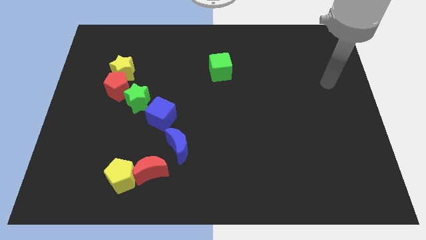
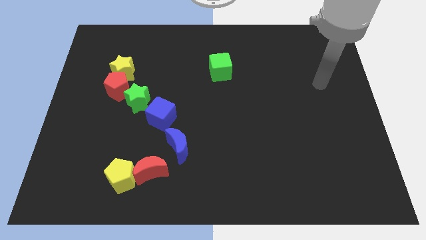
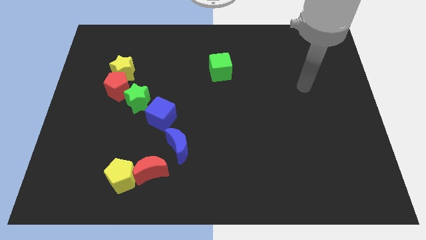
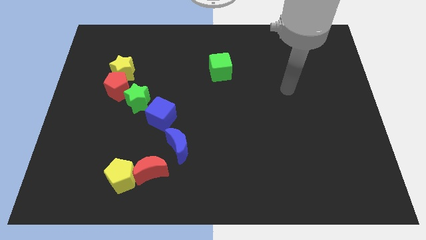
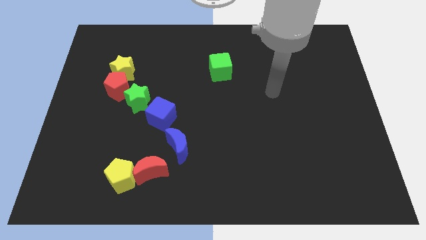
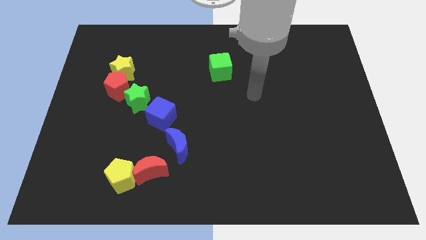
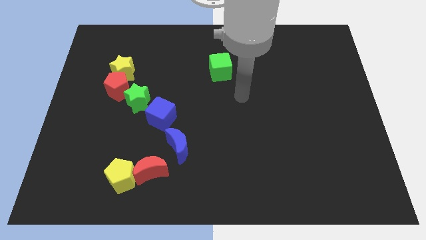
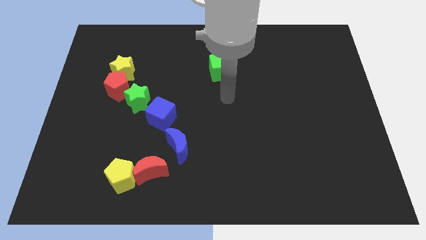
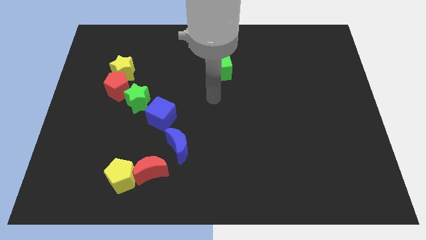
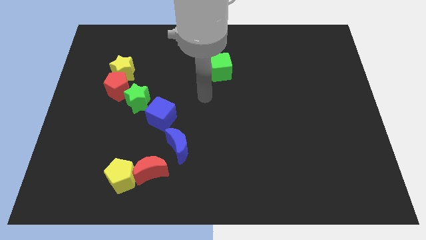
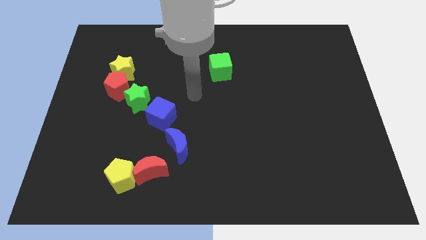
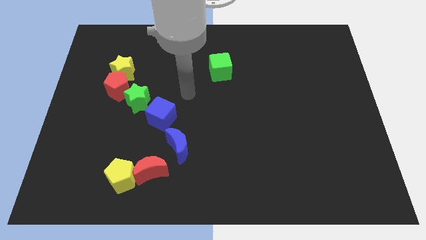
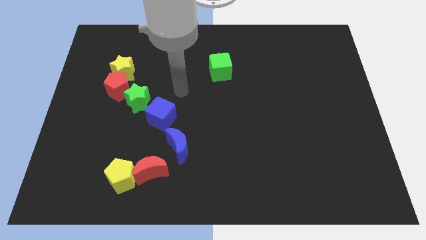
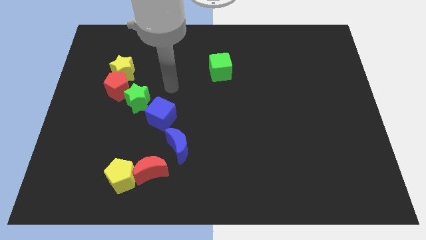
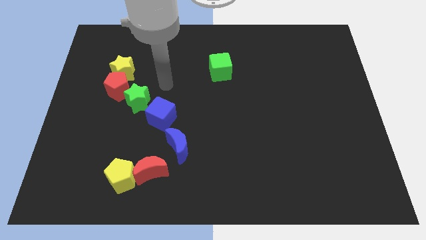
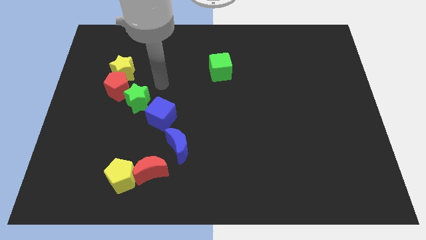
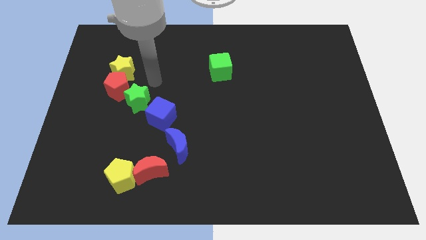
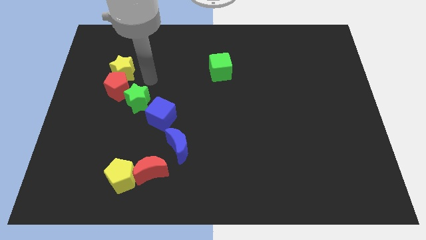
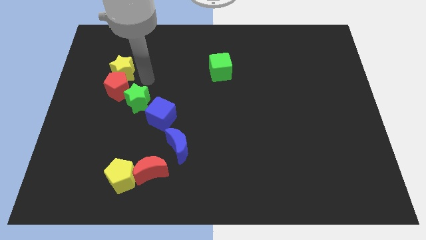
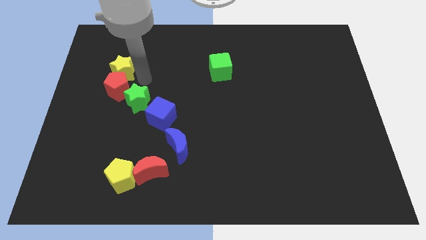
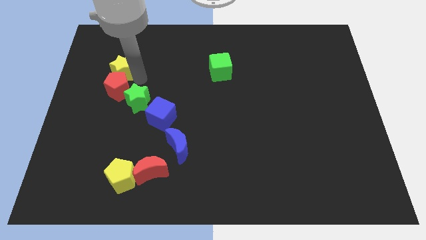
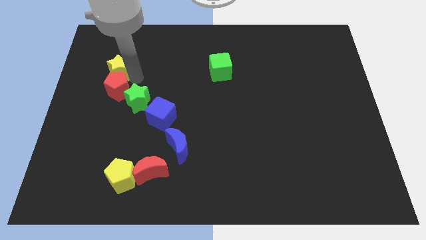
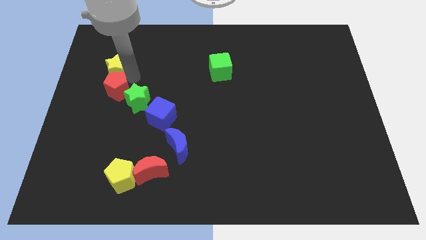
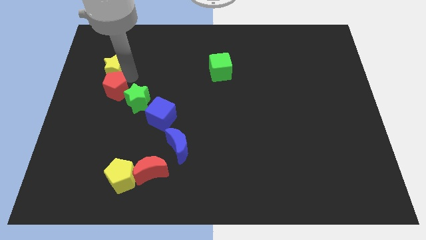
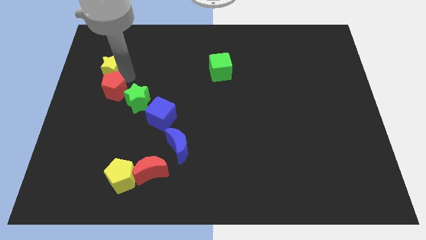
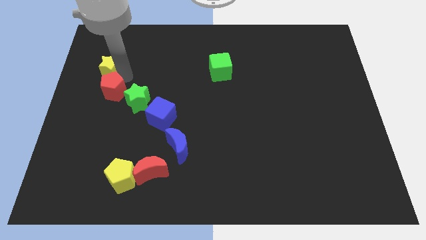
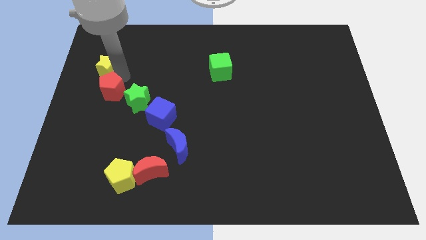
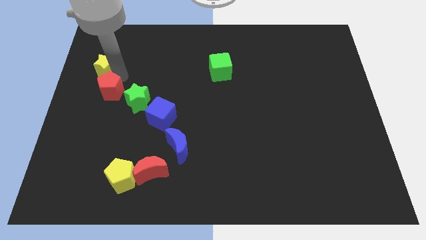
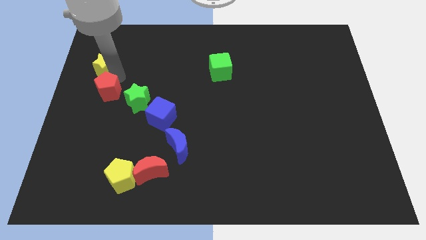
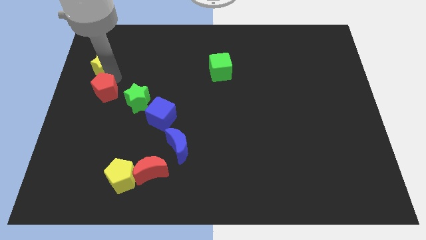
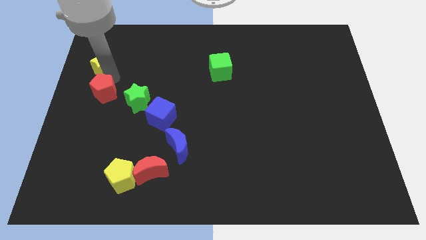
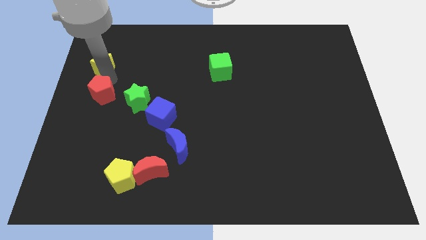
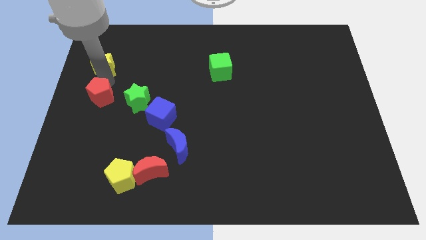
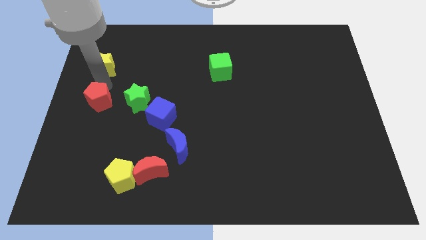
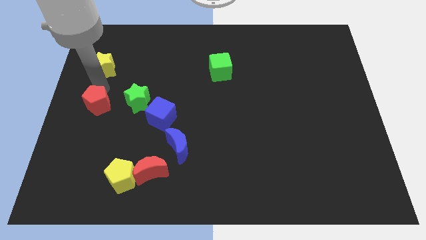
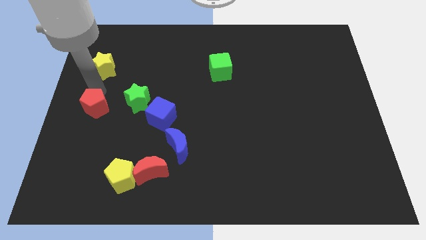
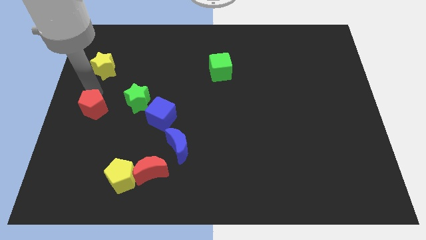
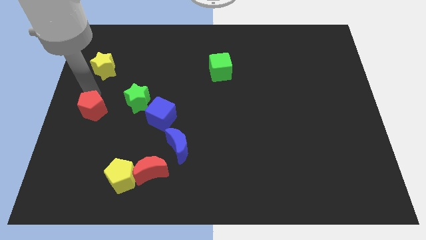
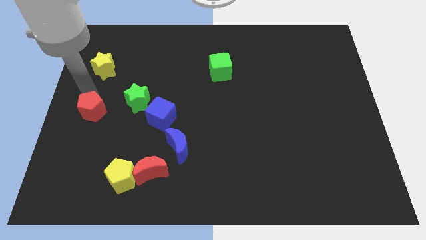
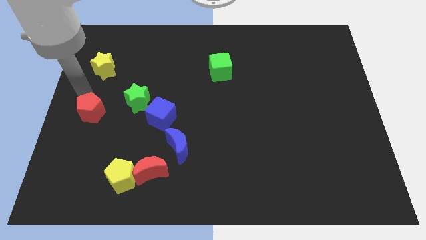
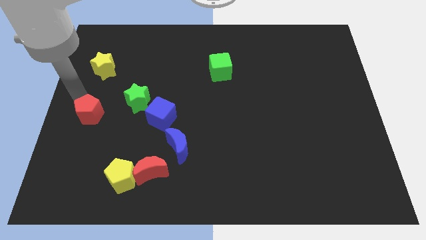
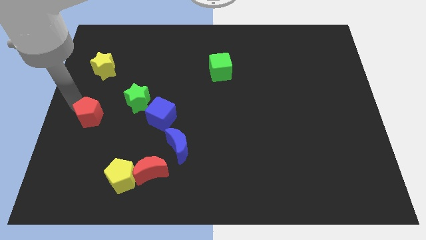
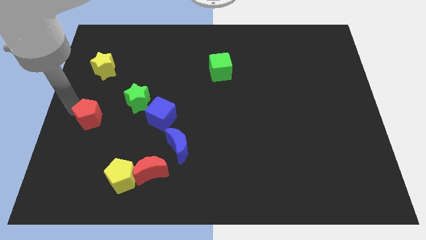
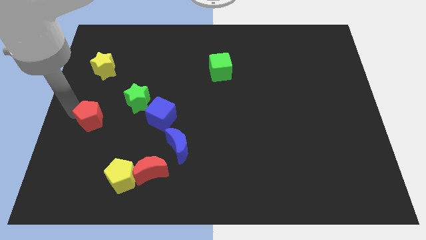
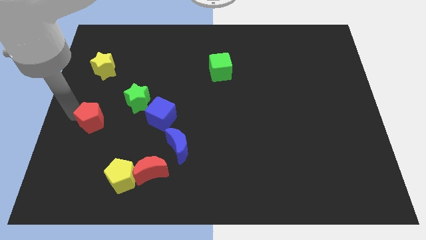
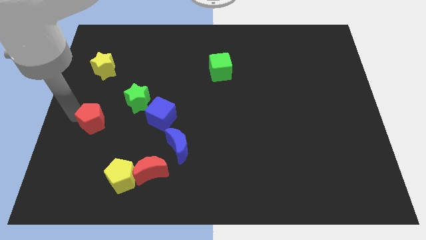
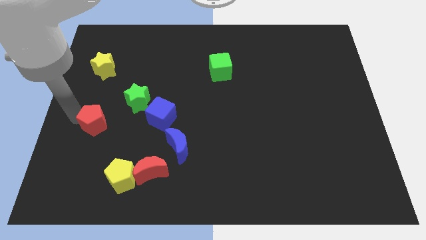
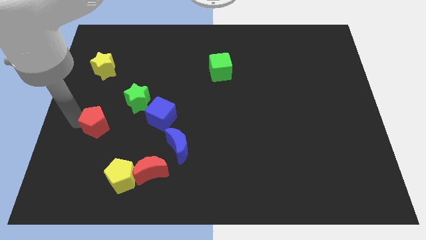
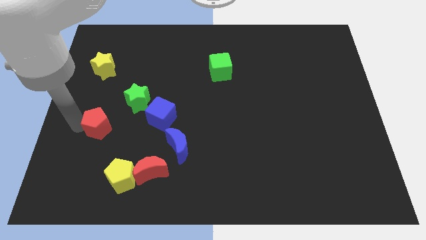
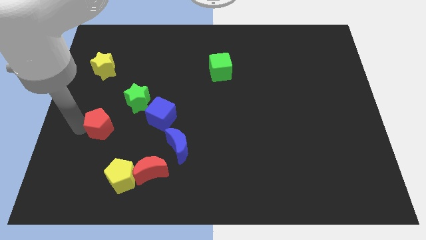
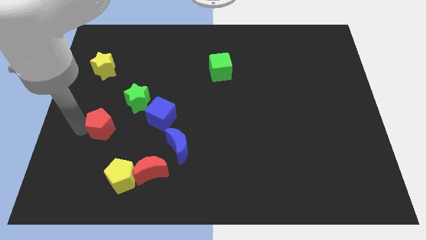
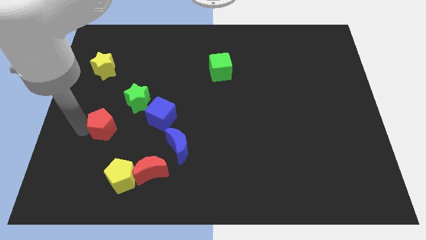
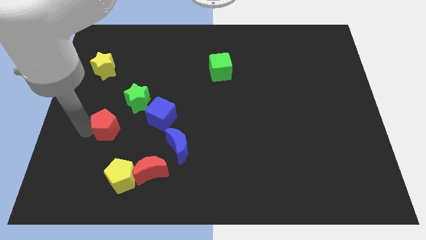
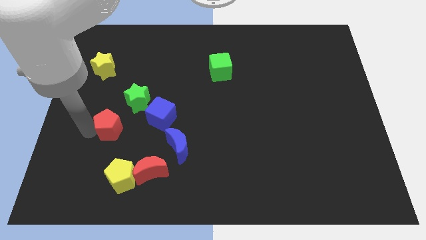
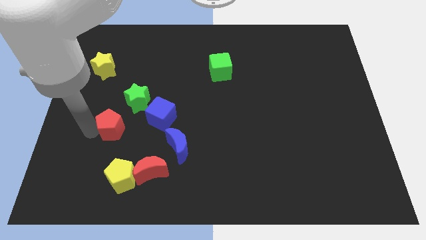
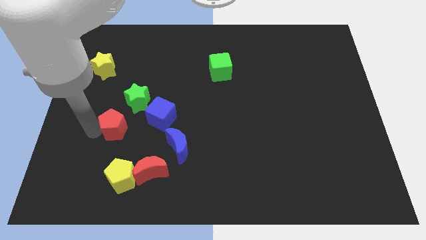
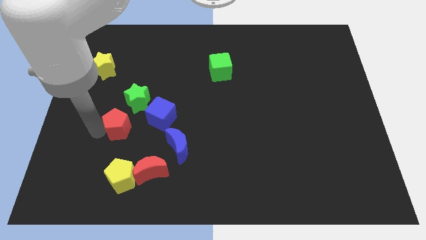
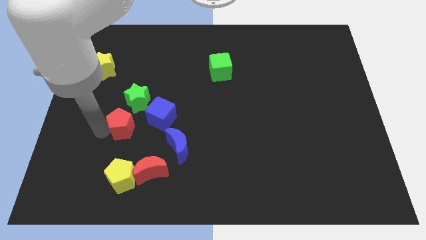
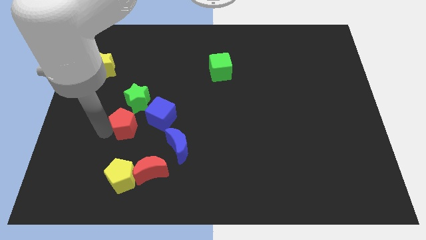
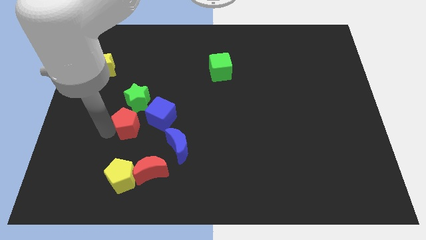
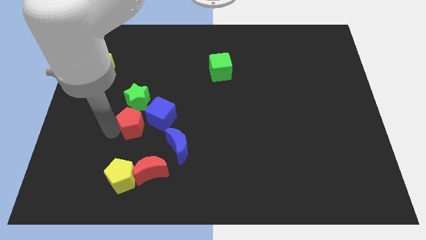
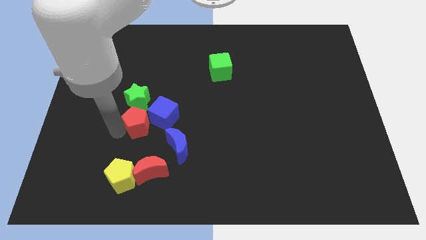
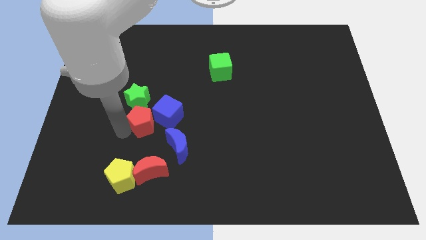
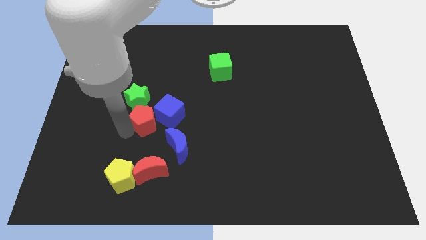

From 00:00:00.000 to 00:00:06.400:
push the red pentagon close to the blue cube

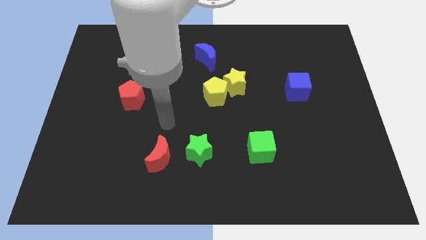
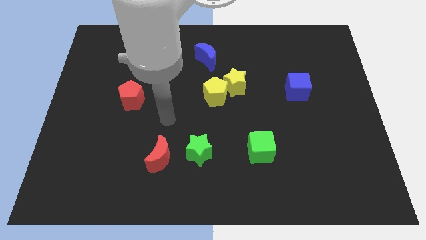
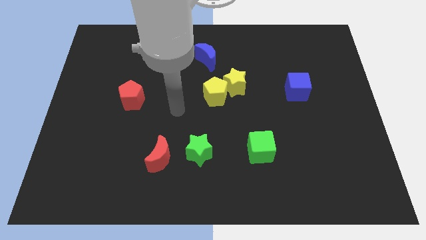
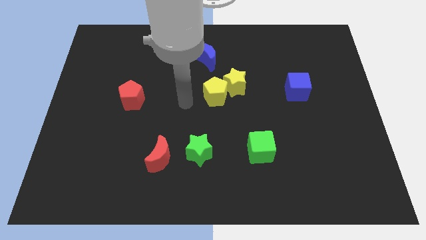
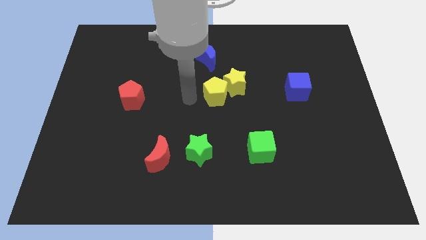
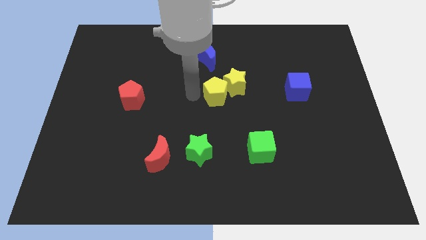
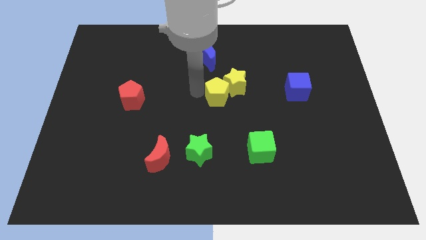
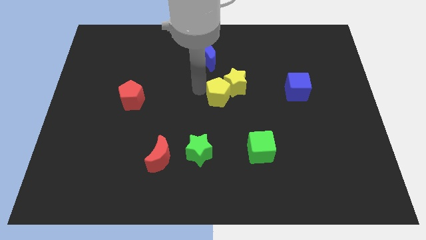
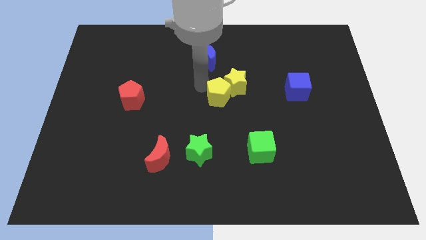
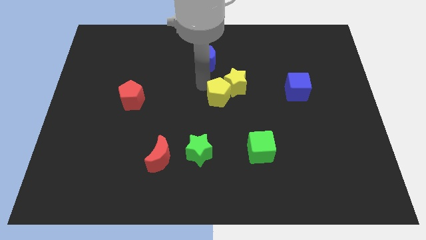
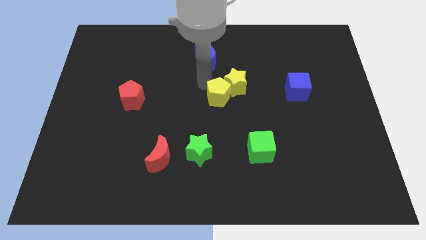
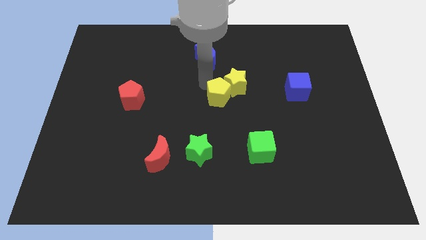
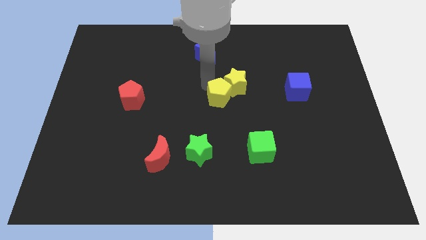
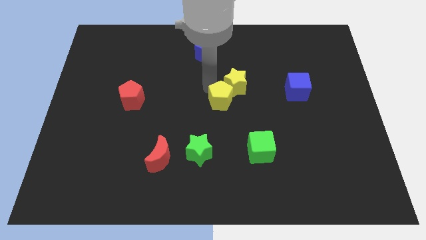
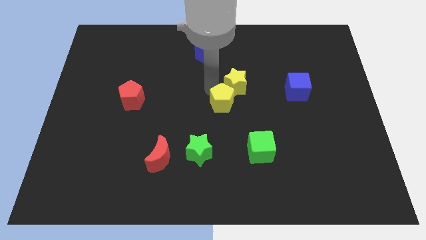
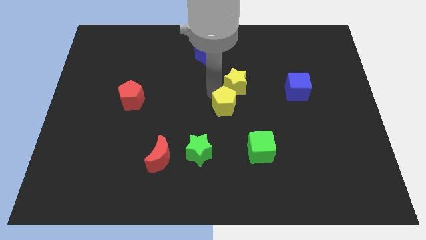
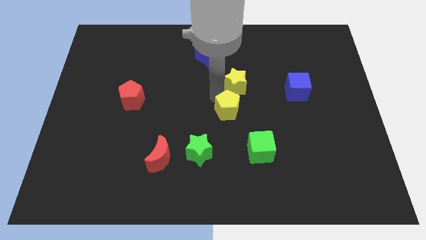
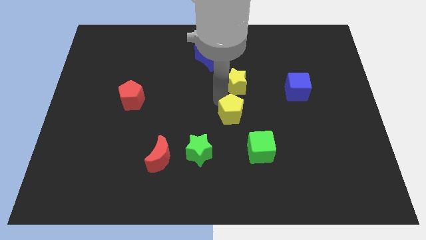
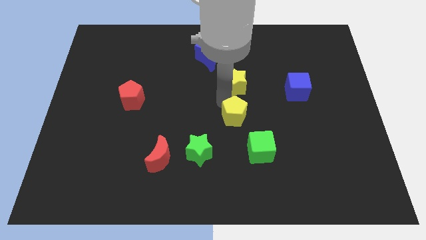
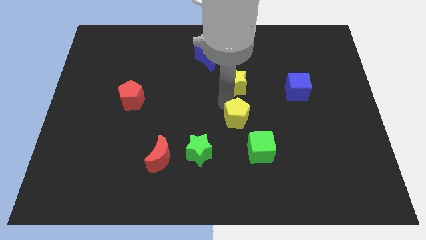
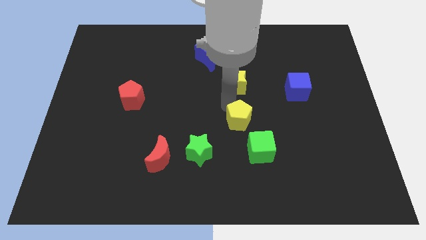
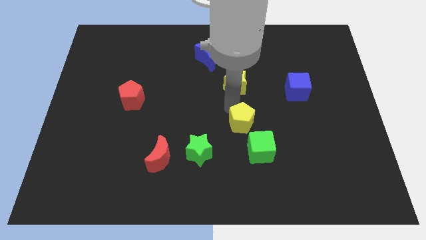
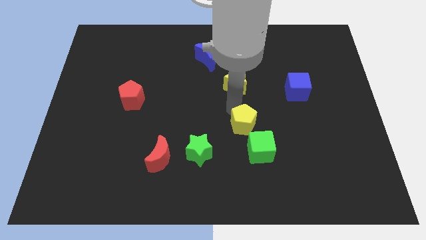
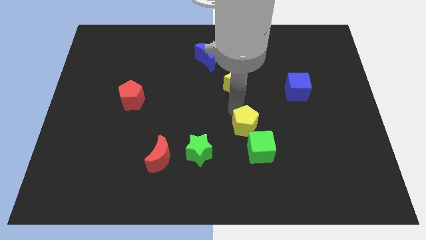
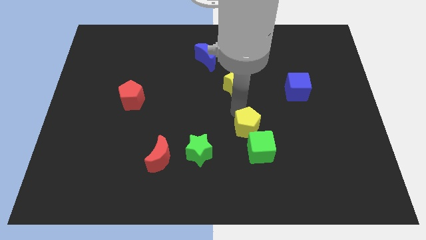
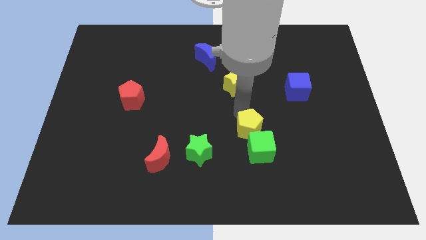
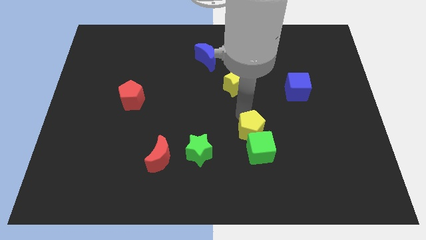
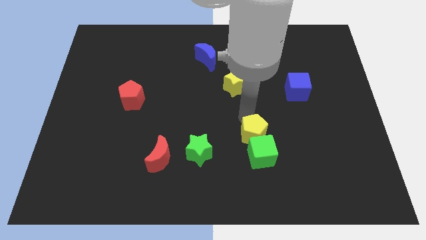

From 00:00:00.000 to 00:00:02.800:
put the yellow pentagon towards the green cube
